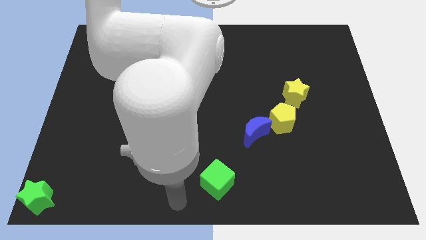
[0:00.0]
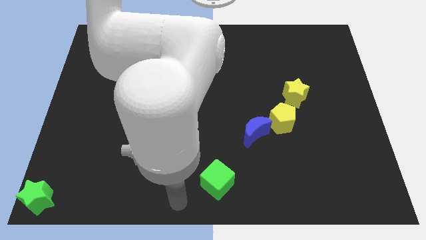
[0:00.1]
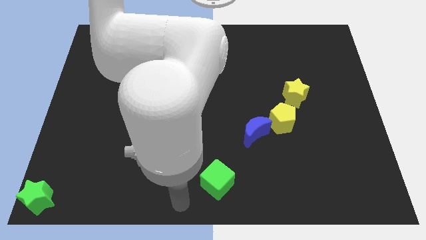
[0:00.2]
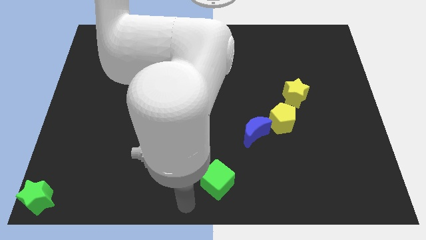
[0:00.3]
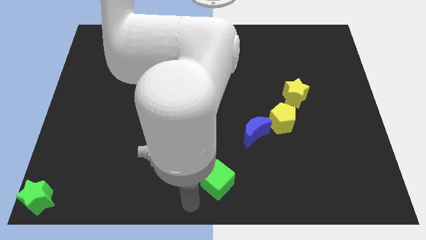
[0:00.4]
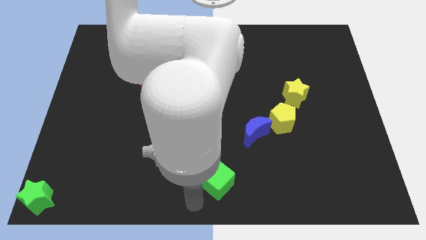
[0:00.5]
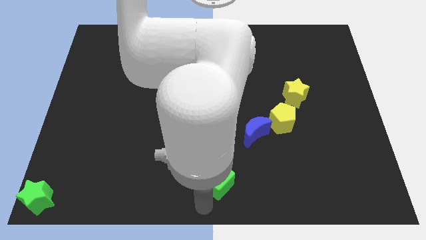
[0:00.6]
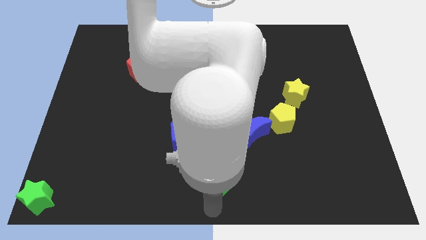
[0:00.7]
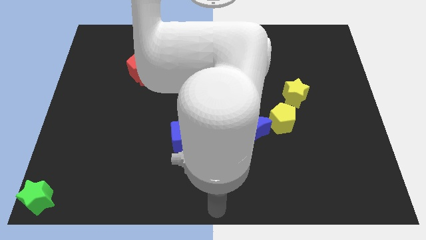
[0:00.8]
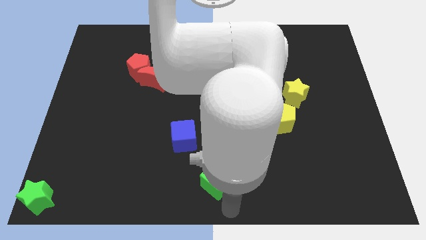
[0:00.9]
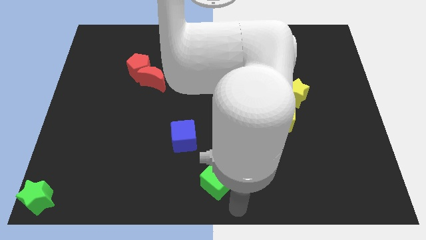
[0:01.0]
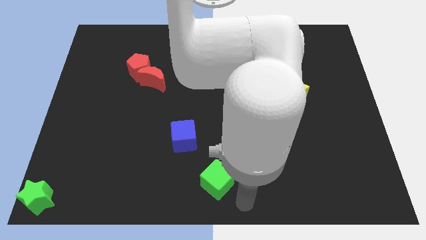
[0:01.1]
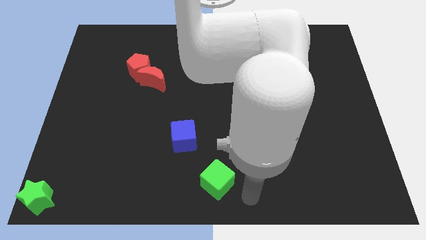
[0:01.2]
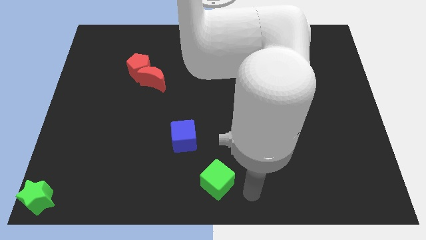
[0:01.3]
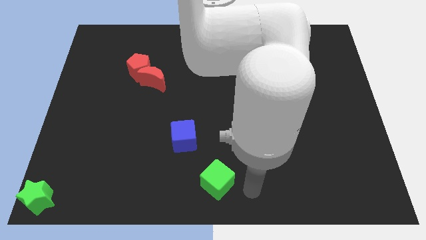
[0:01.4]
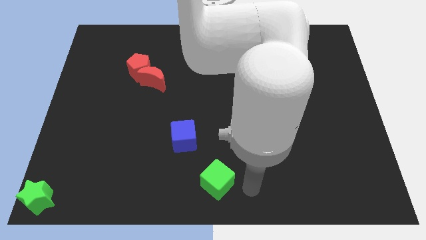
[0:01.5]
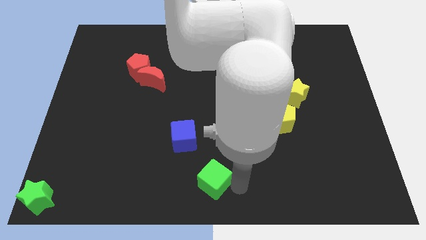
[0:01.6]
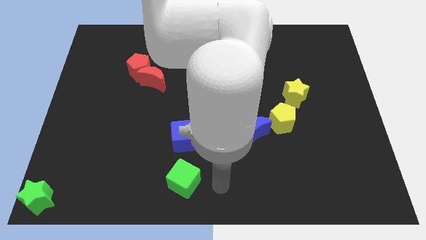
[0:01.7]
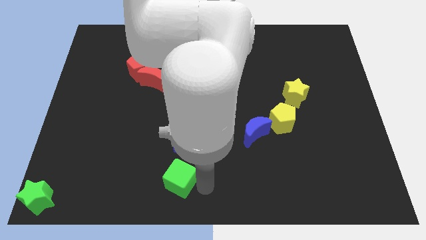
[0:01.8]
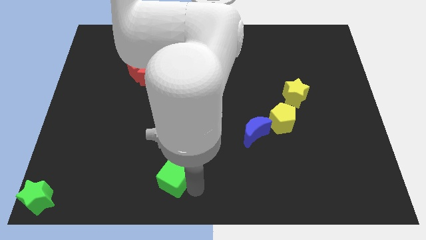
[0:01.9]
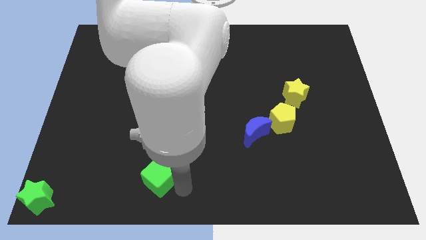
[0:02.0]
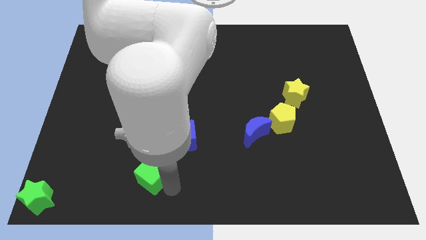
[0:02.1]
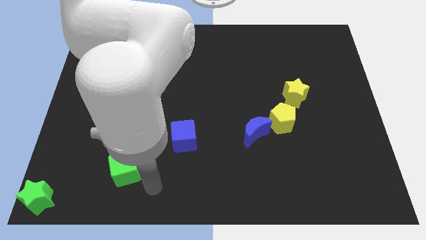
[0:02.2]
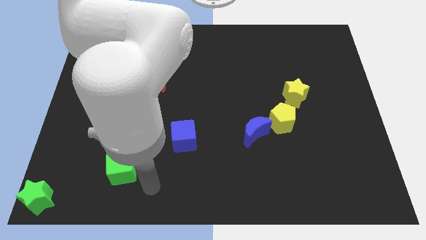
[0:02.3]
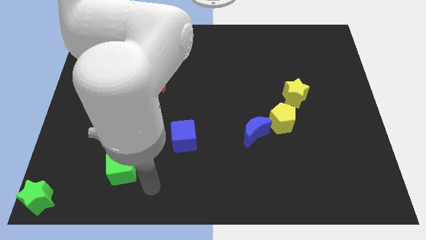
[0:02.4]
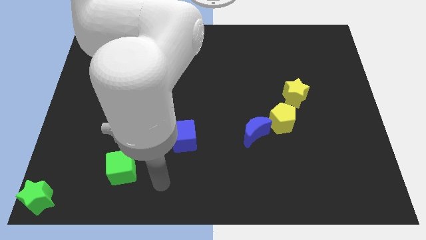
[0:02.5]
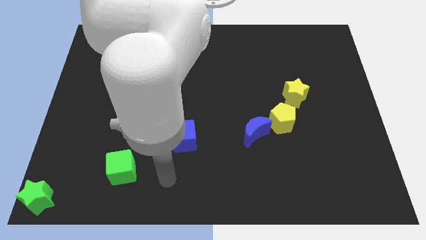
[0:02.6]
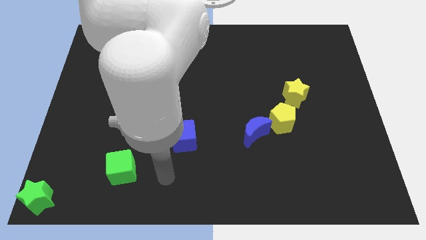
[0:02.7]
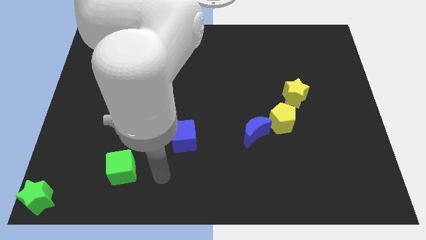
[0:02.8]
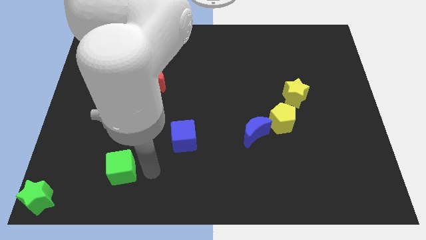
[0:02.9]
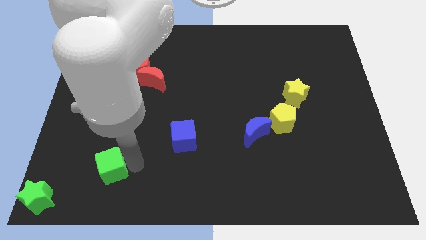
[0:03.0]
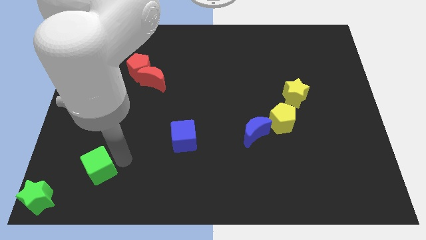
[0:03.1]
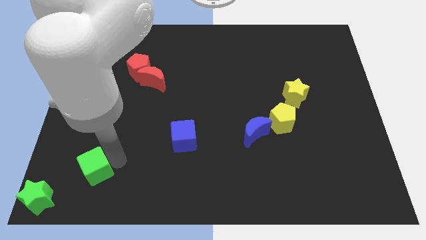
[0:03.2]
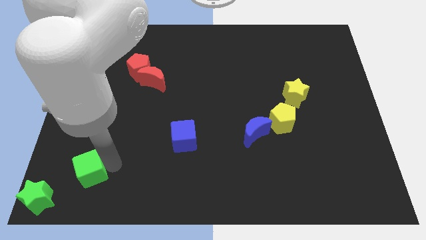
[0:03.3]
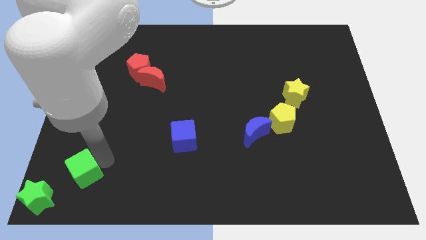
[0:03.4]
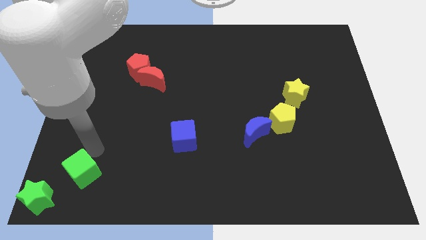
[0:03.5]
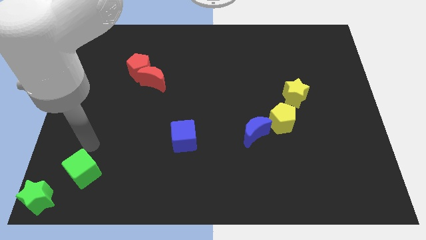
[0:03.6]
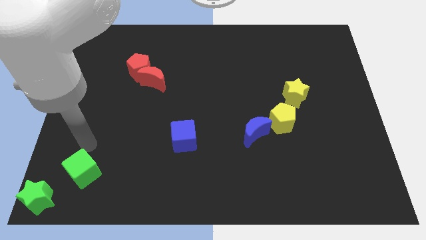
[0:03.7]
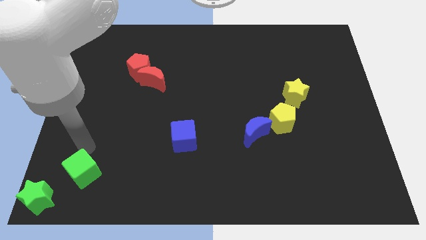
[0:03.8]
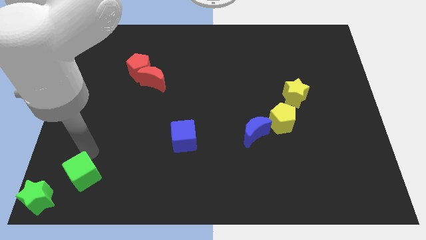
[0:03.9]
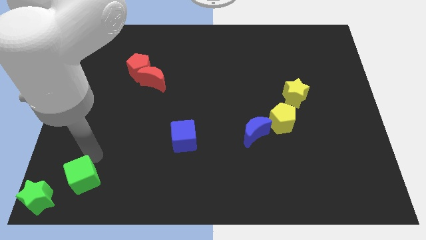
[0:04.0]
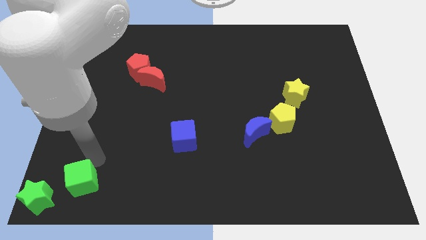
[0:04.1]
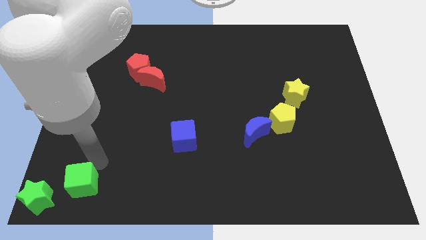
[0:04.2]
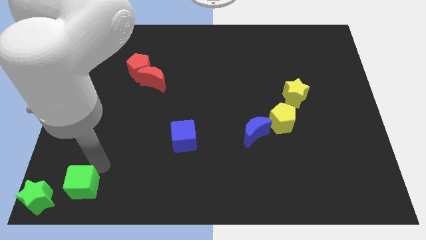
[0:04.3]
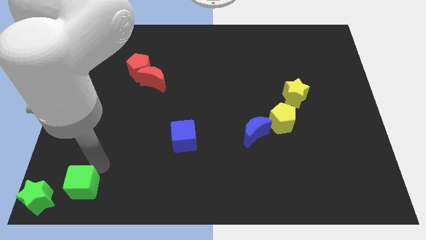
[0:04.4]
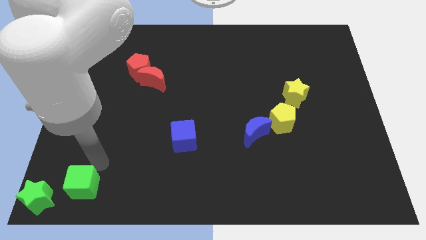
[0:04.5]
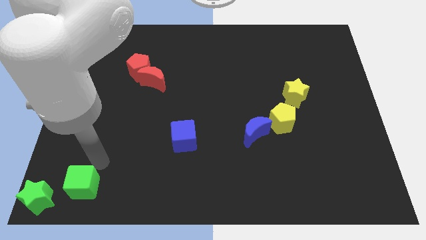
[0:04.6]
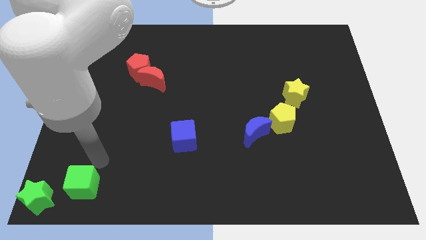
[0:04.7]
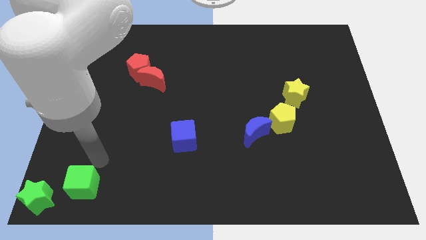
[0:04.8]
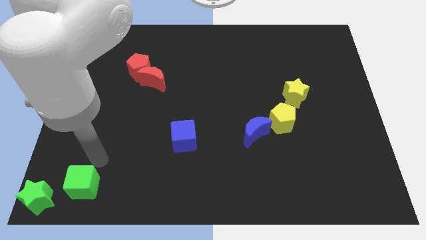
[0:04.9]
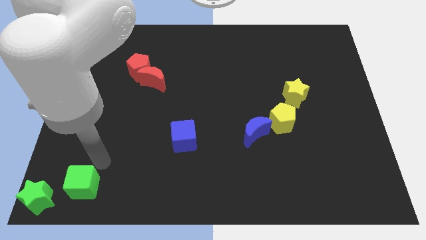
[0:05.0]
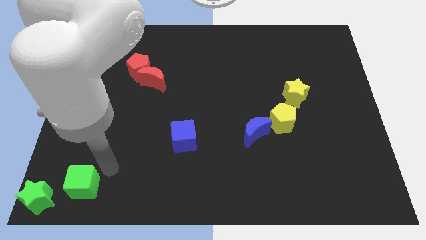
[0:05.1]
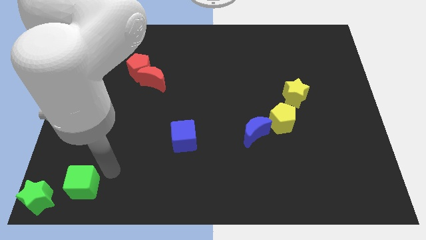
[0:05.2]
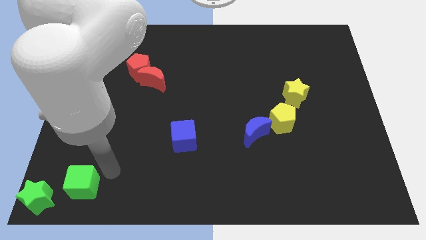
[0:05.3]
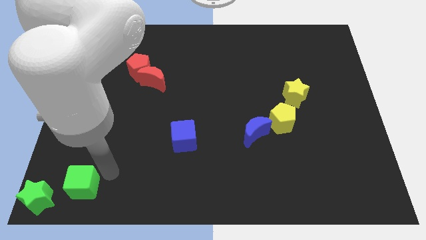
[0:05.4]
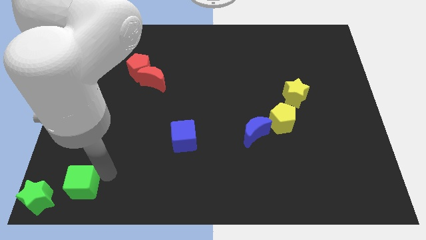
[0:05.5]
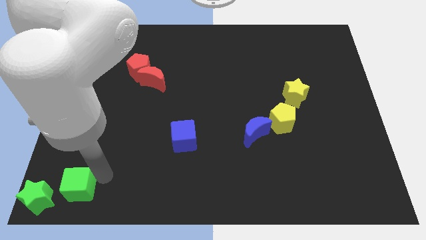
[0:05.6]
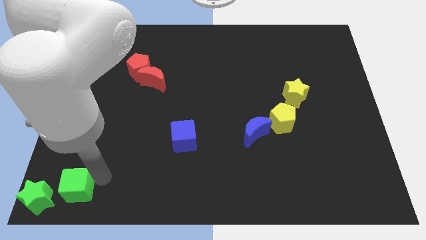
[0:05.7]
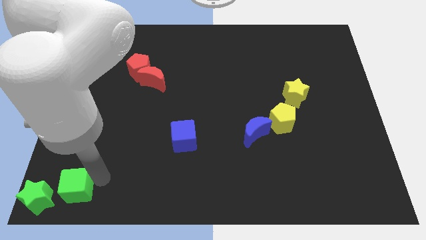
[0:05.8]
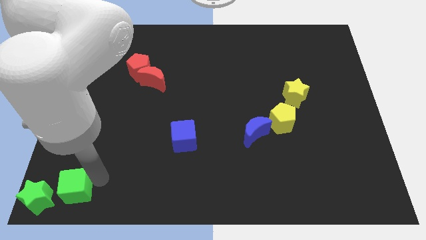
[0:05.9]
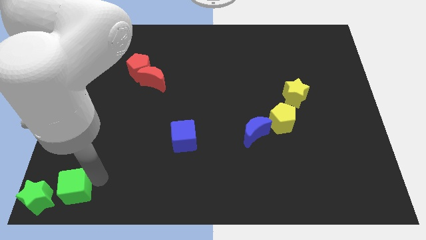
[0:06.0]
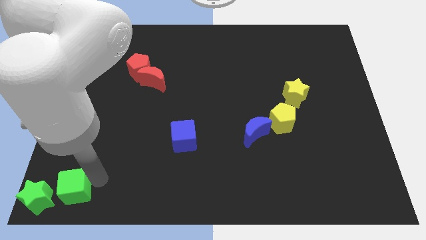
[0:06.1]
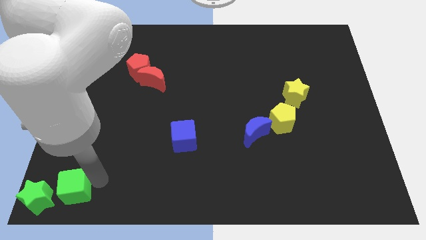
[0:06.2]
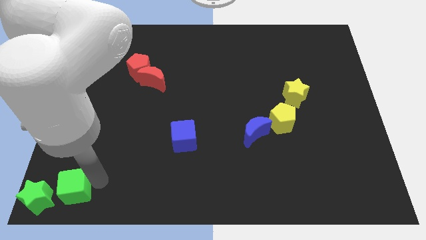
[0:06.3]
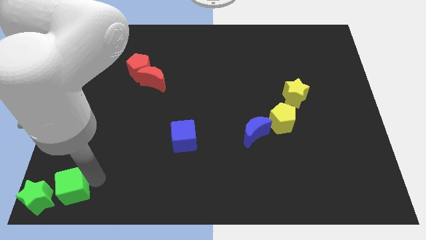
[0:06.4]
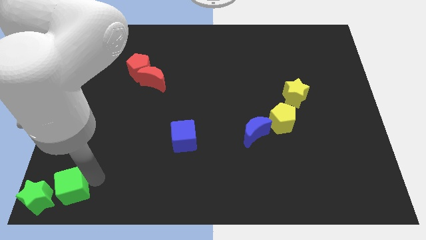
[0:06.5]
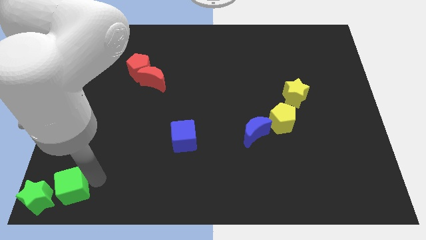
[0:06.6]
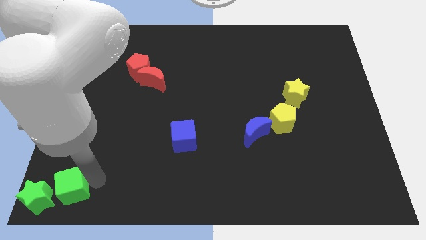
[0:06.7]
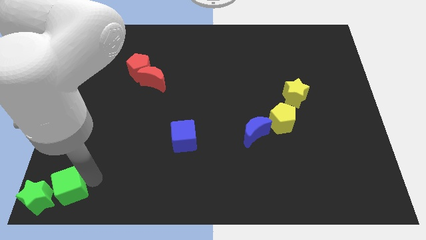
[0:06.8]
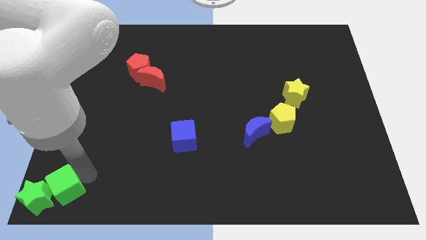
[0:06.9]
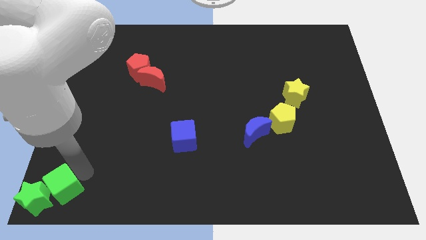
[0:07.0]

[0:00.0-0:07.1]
push the green cube into the green star

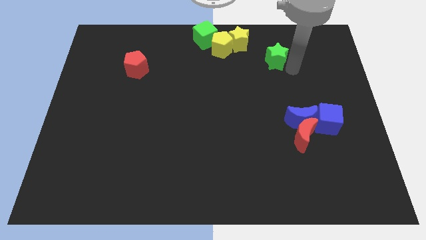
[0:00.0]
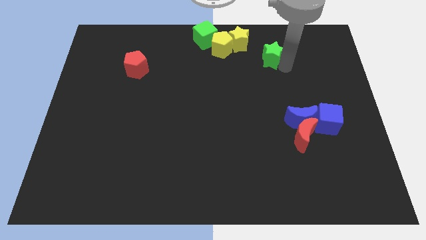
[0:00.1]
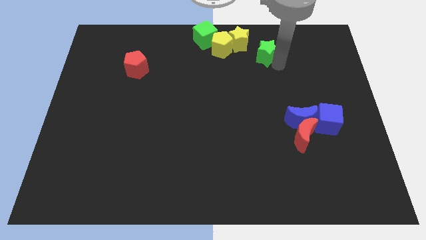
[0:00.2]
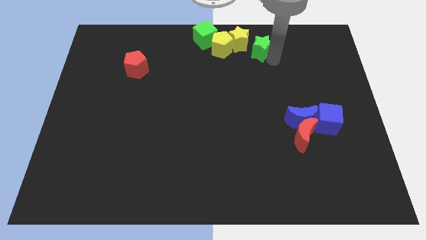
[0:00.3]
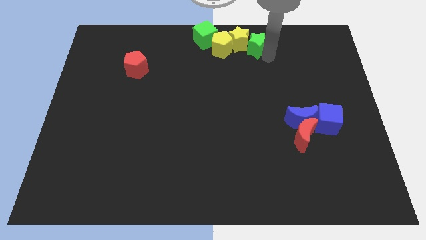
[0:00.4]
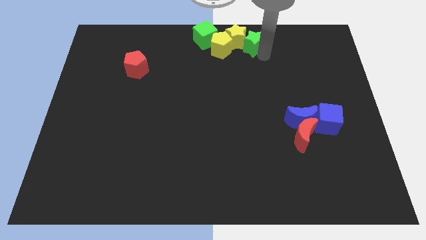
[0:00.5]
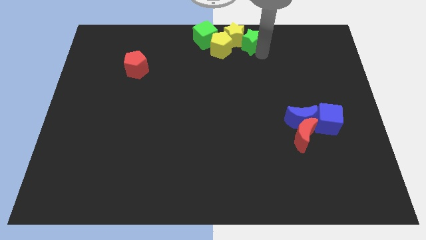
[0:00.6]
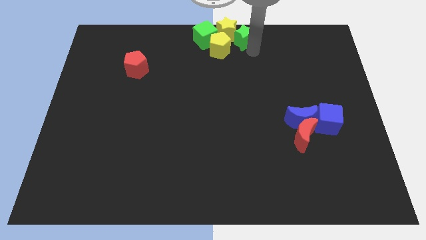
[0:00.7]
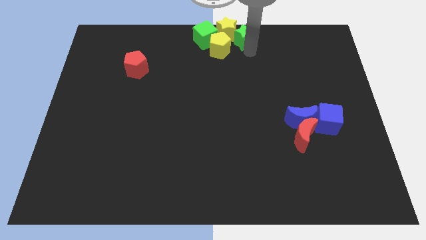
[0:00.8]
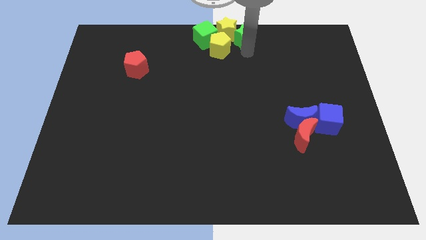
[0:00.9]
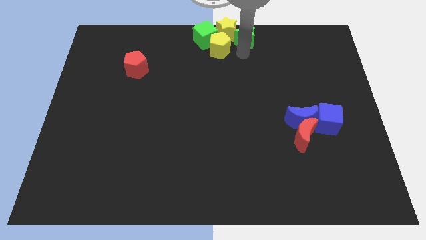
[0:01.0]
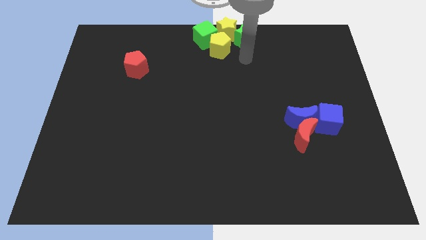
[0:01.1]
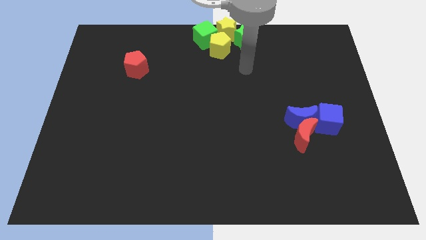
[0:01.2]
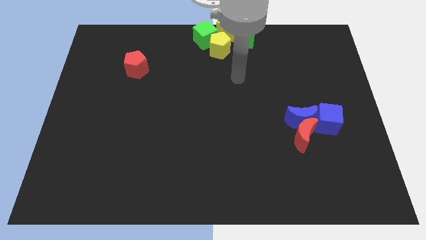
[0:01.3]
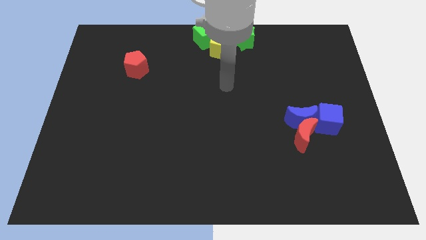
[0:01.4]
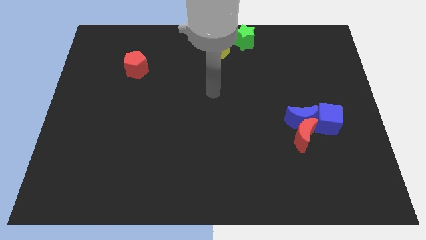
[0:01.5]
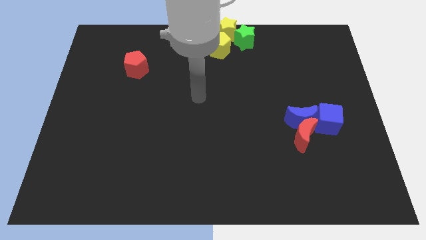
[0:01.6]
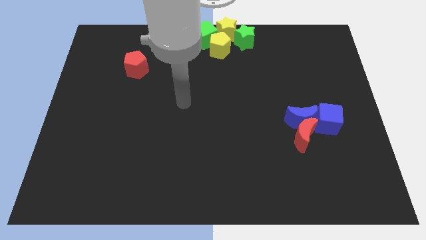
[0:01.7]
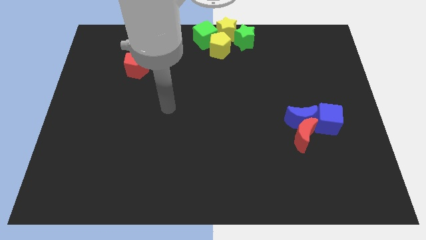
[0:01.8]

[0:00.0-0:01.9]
push the green star into the yellow star

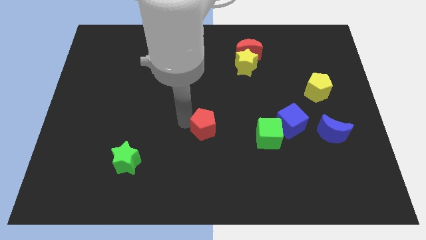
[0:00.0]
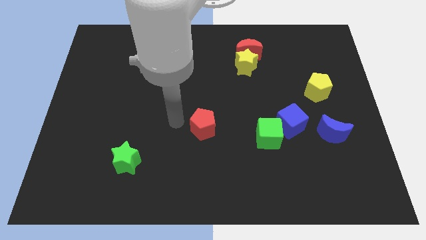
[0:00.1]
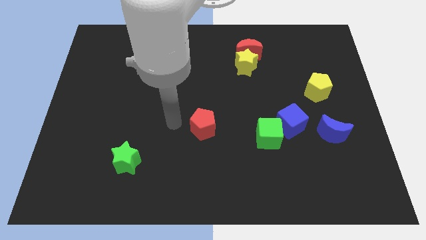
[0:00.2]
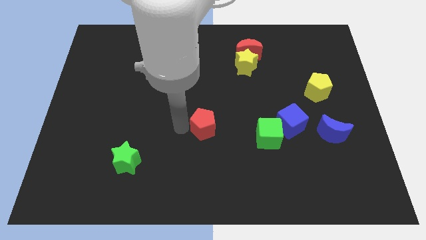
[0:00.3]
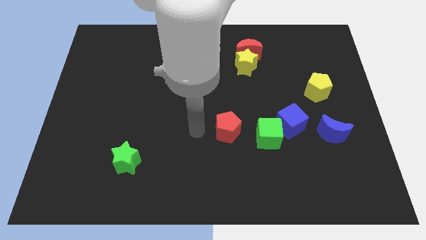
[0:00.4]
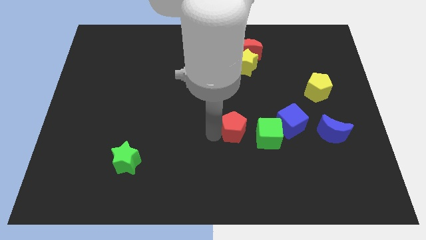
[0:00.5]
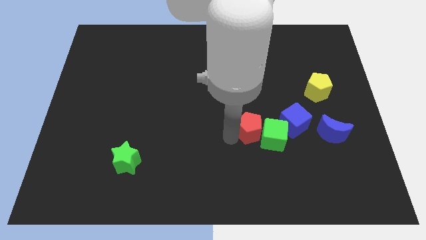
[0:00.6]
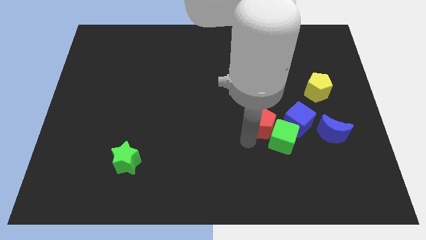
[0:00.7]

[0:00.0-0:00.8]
place the red pentagon left to the green cube
